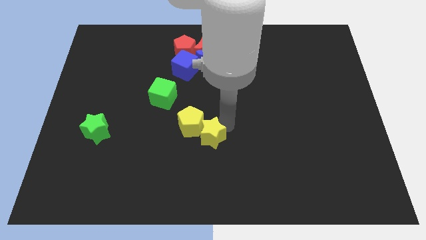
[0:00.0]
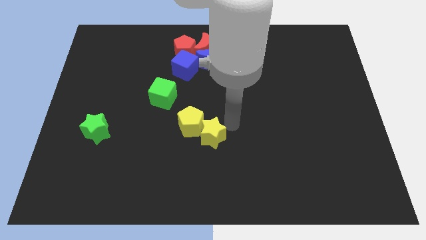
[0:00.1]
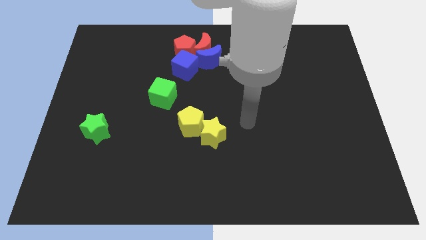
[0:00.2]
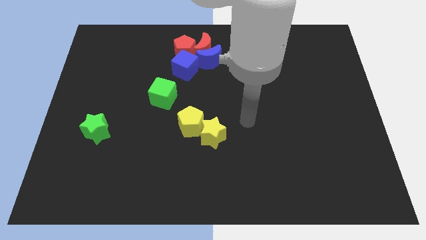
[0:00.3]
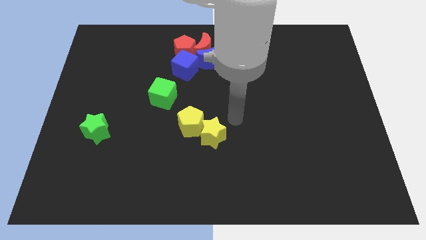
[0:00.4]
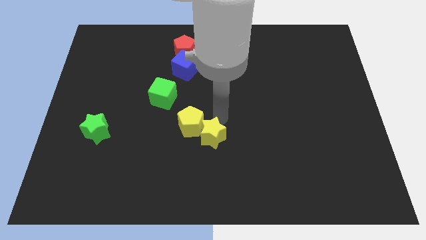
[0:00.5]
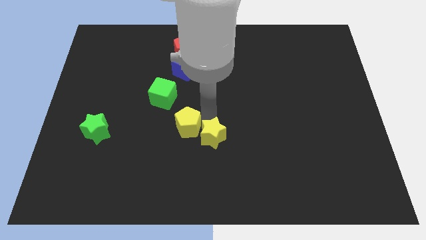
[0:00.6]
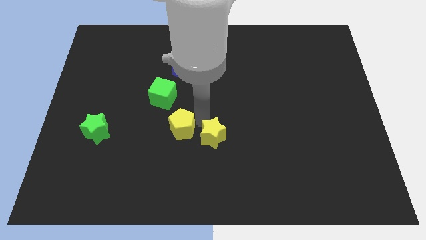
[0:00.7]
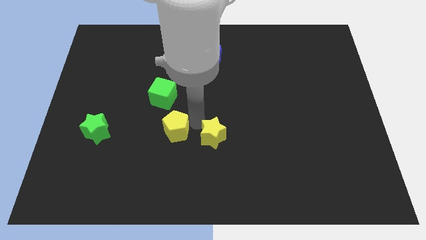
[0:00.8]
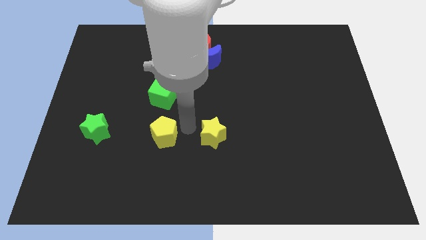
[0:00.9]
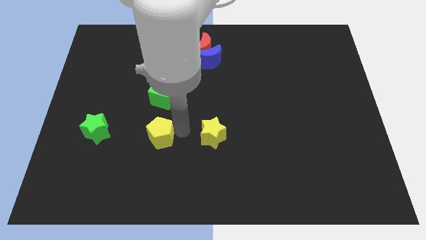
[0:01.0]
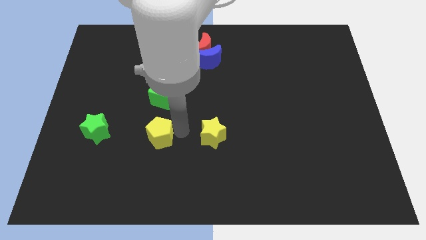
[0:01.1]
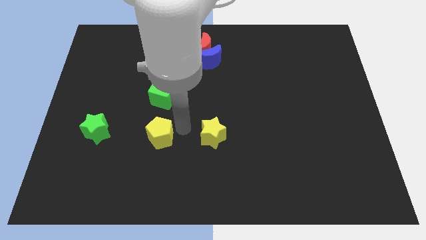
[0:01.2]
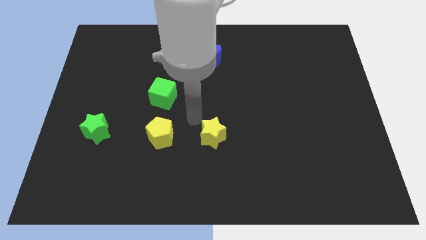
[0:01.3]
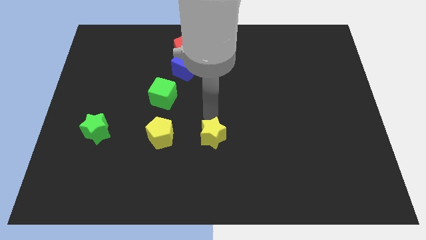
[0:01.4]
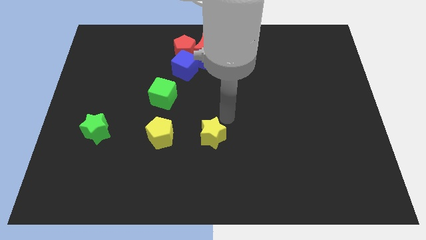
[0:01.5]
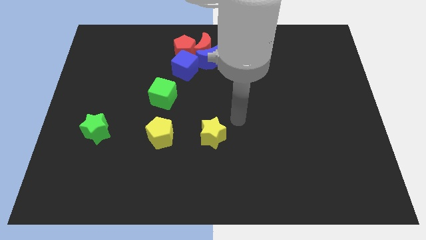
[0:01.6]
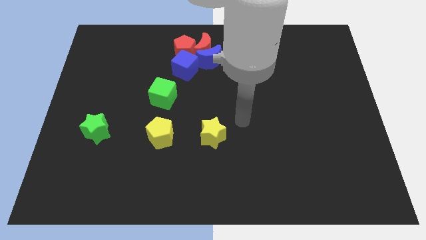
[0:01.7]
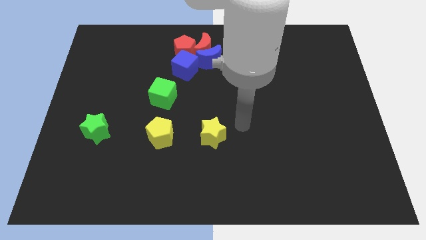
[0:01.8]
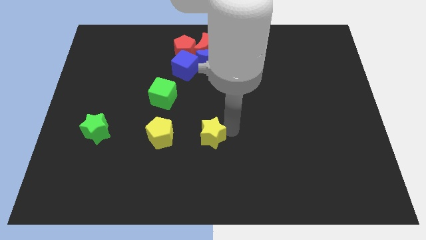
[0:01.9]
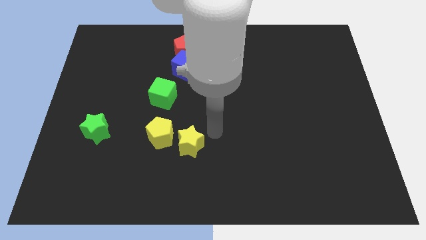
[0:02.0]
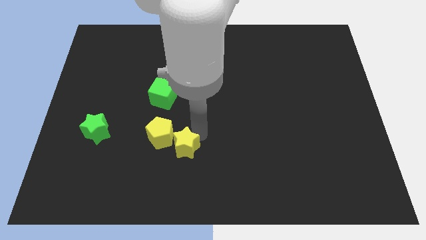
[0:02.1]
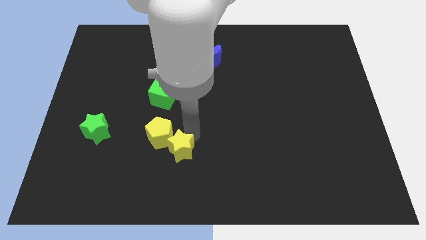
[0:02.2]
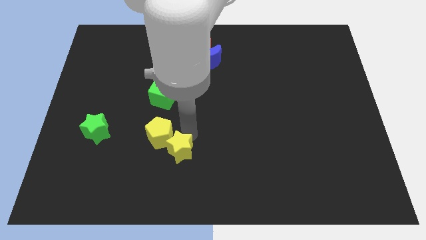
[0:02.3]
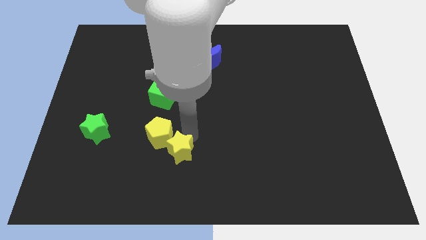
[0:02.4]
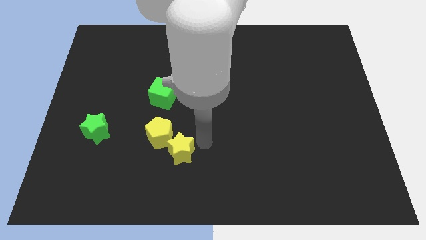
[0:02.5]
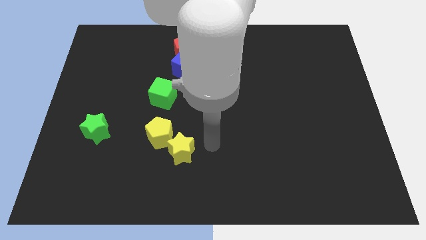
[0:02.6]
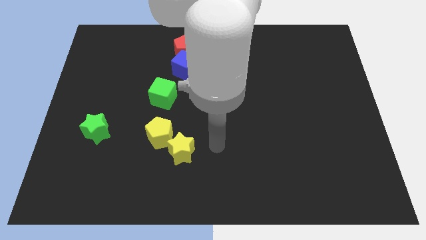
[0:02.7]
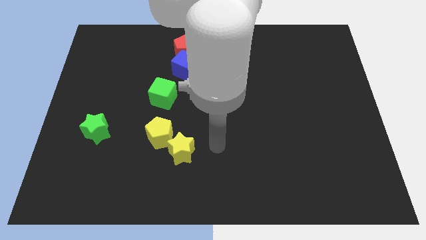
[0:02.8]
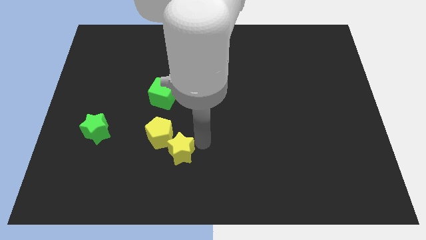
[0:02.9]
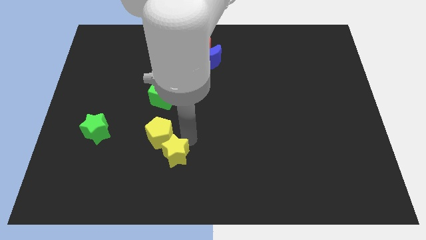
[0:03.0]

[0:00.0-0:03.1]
slide the yellow blocks to the bottom side of the green cube

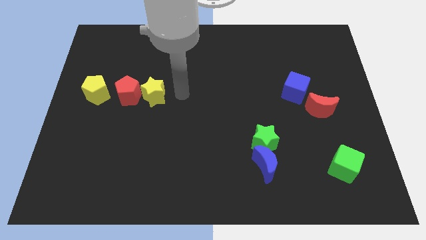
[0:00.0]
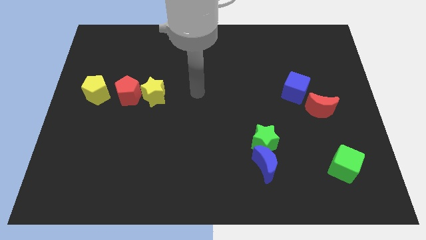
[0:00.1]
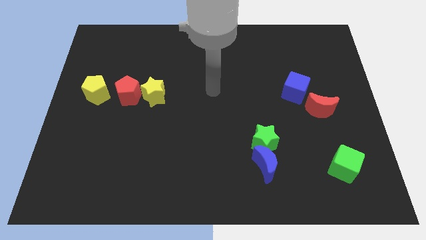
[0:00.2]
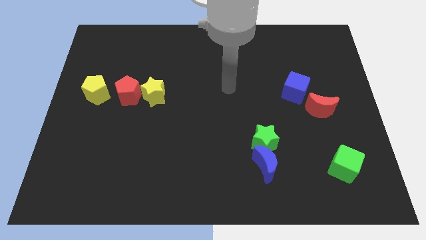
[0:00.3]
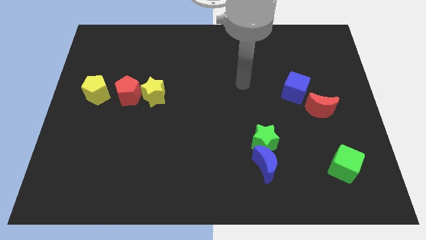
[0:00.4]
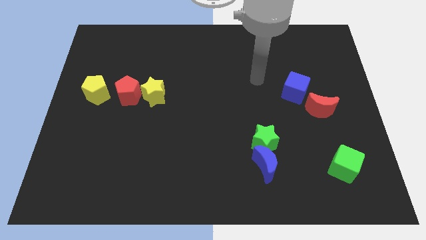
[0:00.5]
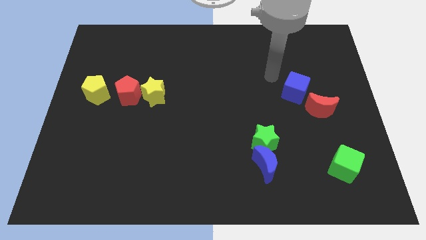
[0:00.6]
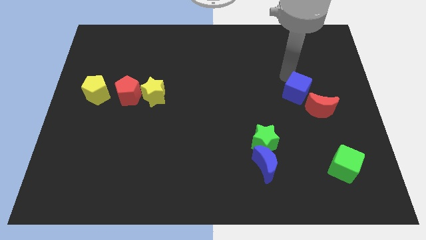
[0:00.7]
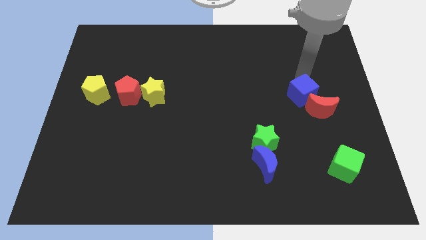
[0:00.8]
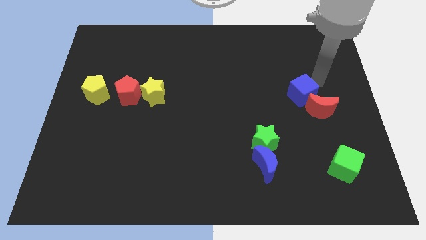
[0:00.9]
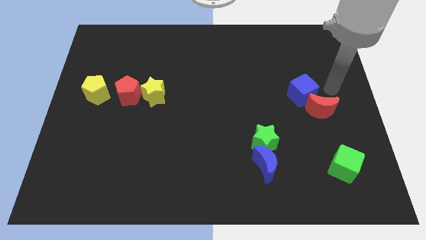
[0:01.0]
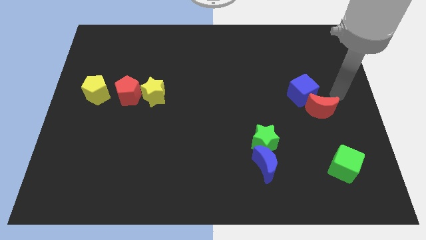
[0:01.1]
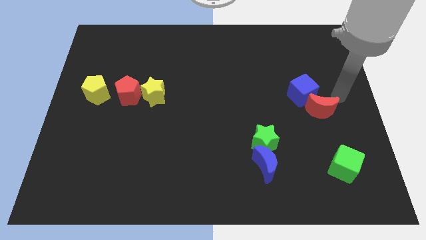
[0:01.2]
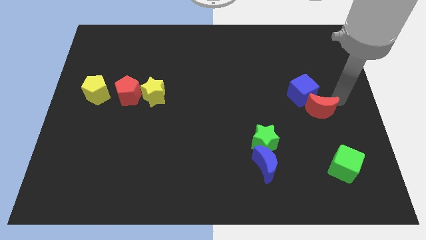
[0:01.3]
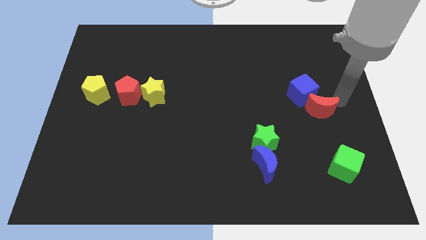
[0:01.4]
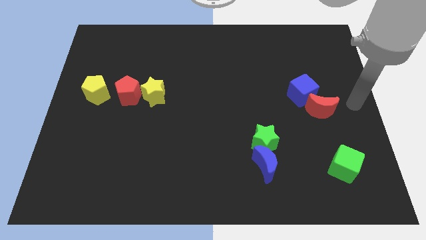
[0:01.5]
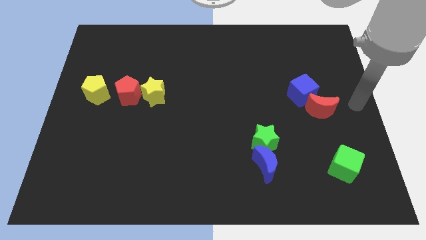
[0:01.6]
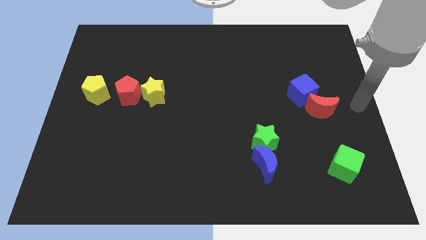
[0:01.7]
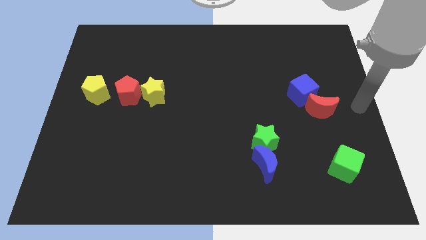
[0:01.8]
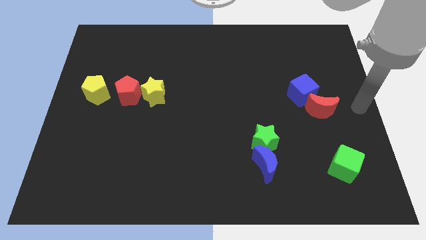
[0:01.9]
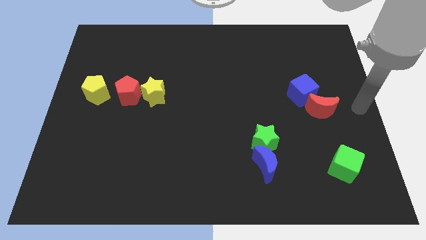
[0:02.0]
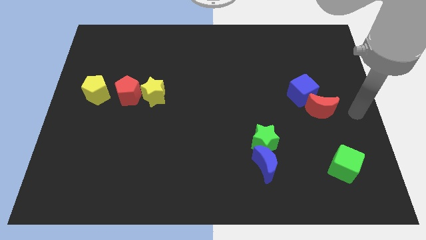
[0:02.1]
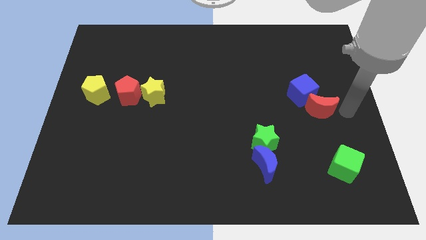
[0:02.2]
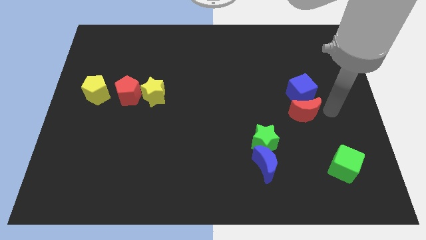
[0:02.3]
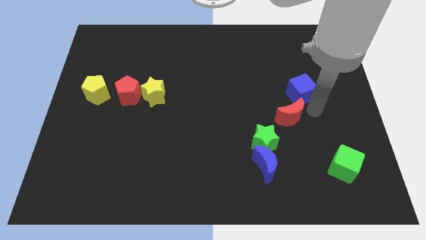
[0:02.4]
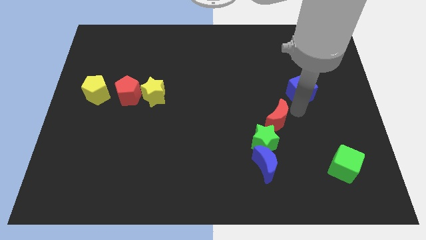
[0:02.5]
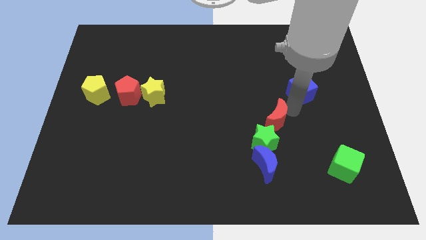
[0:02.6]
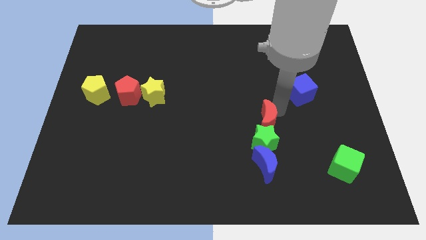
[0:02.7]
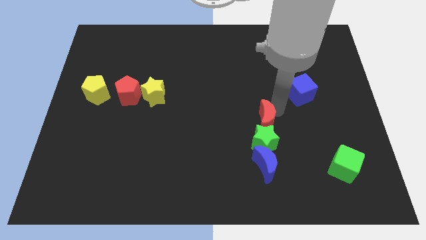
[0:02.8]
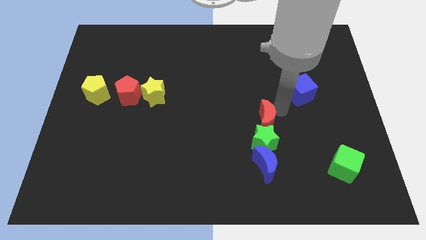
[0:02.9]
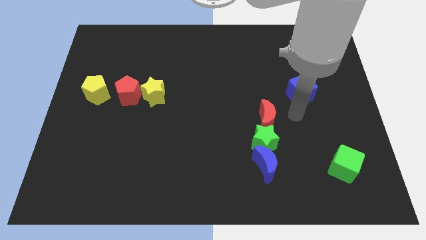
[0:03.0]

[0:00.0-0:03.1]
put the red moon at the top of green star

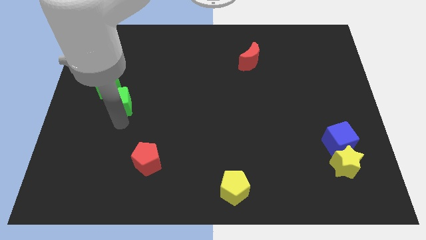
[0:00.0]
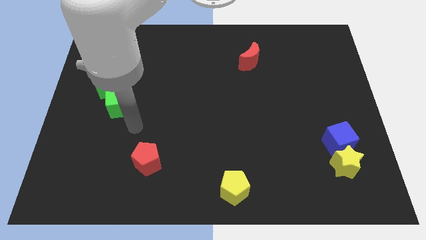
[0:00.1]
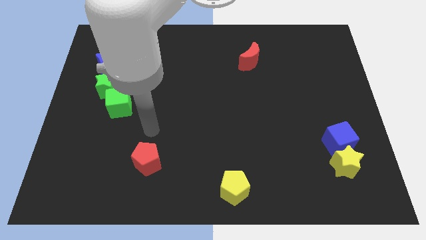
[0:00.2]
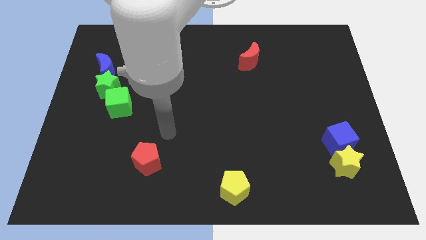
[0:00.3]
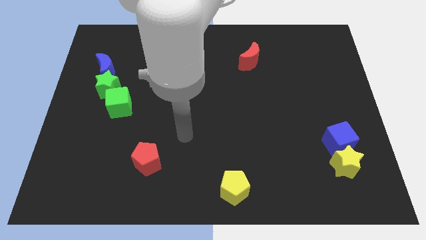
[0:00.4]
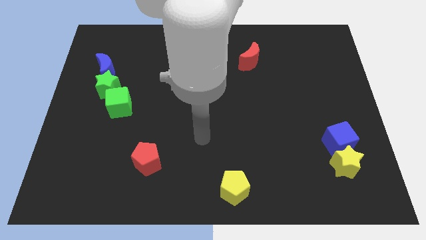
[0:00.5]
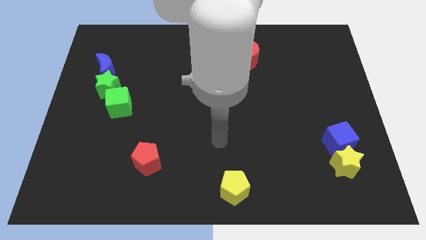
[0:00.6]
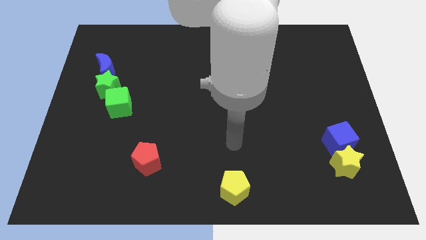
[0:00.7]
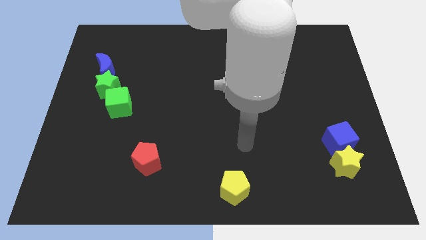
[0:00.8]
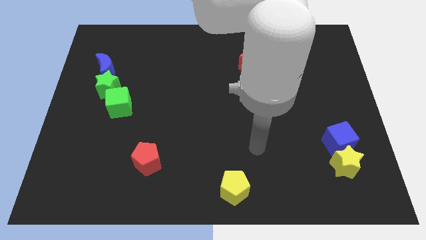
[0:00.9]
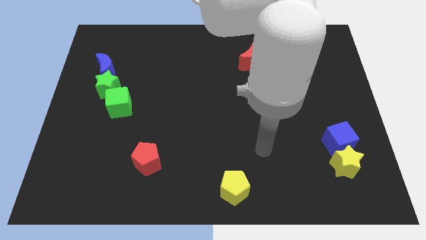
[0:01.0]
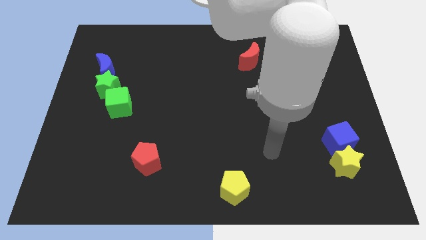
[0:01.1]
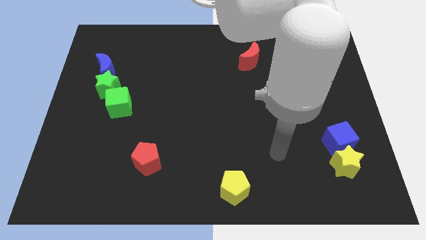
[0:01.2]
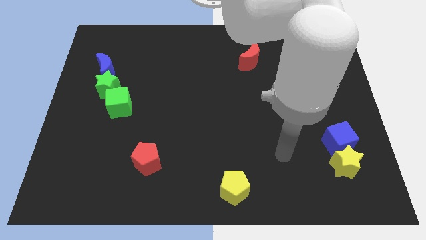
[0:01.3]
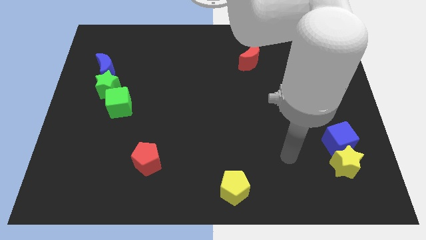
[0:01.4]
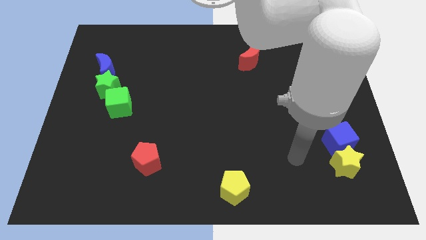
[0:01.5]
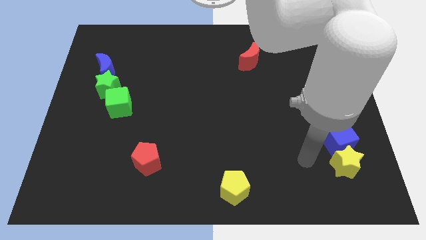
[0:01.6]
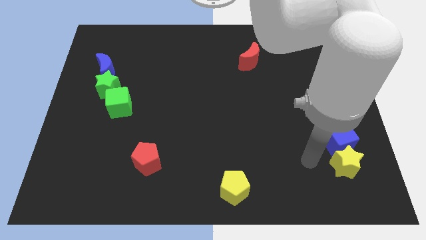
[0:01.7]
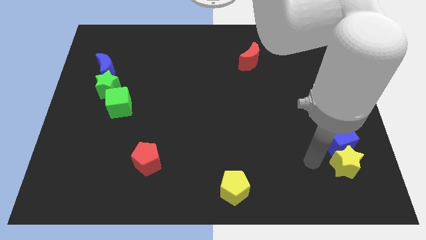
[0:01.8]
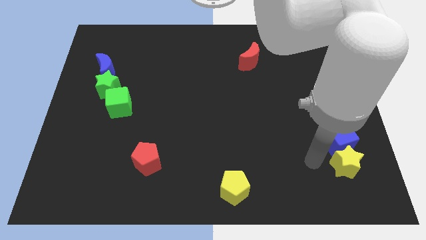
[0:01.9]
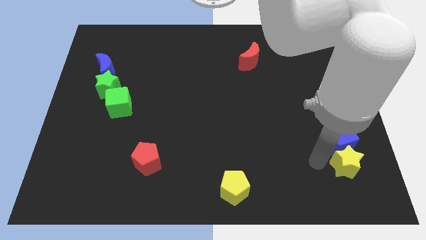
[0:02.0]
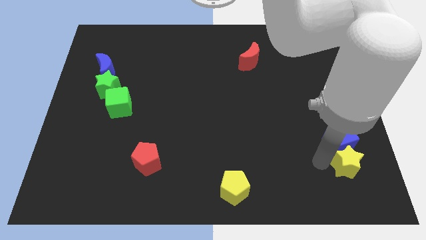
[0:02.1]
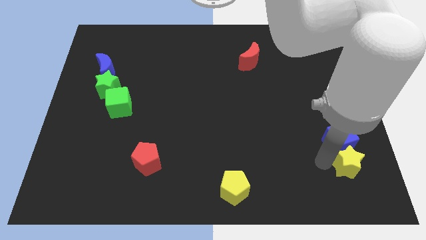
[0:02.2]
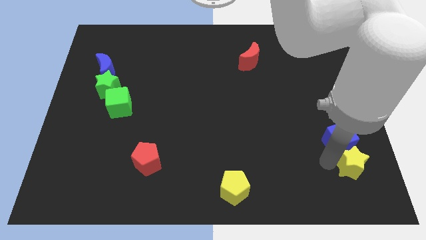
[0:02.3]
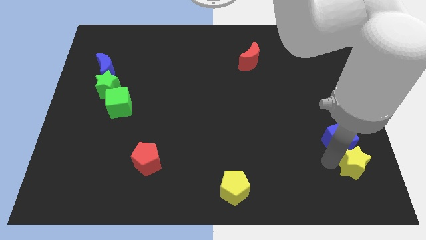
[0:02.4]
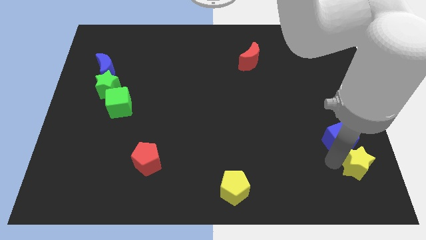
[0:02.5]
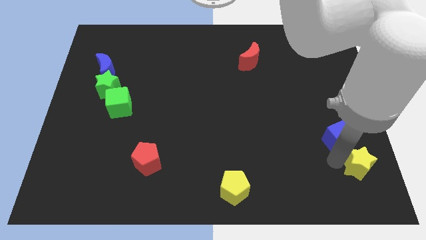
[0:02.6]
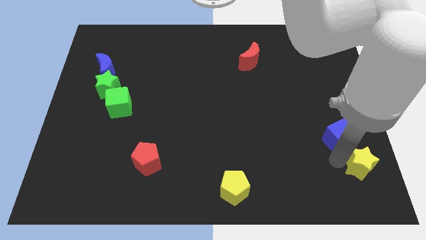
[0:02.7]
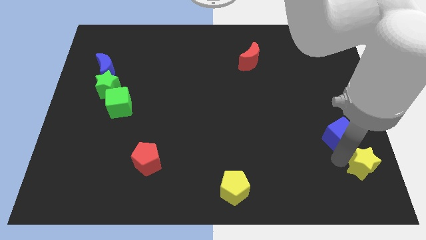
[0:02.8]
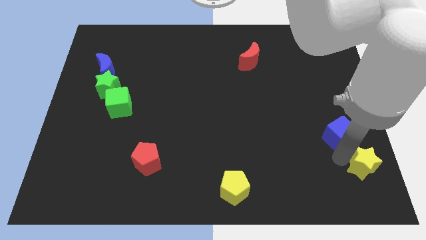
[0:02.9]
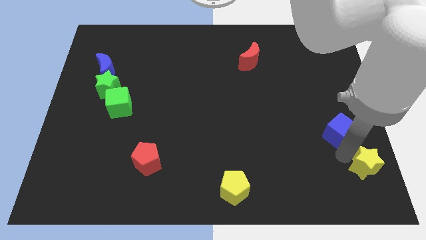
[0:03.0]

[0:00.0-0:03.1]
push the yellow star slightly to the right
